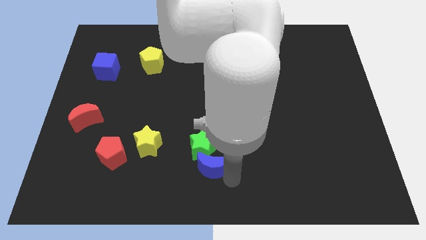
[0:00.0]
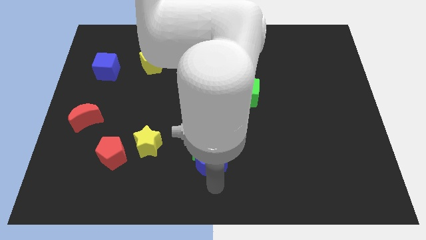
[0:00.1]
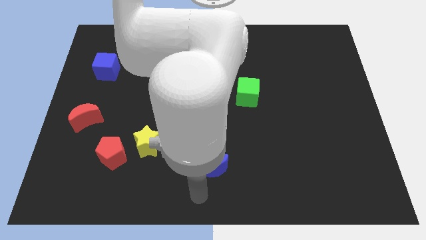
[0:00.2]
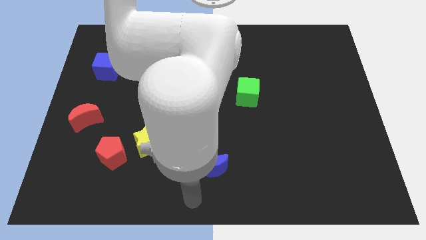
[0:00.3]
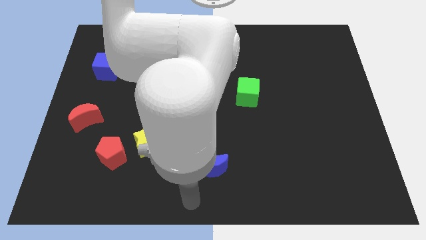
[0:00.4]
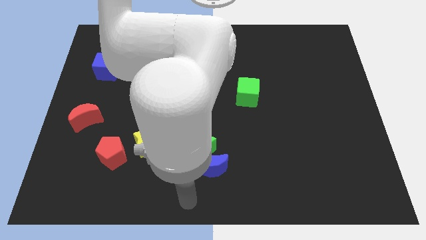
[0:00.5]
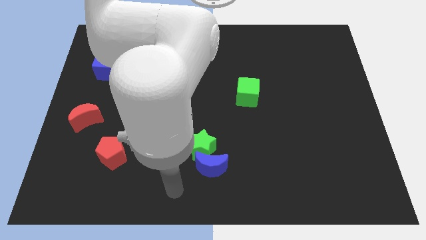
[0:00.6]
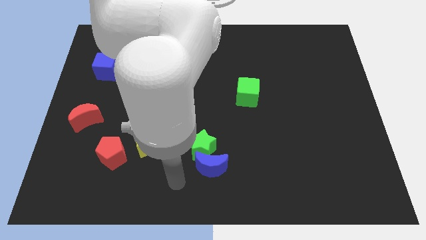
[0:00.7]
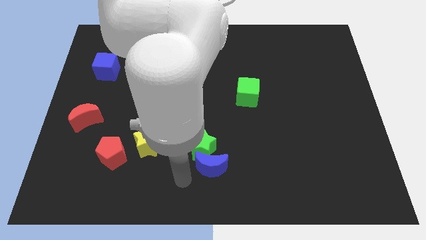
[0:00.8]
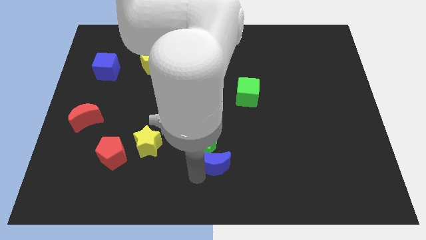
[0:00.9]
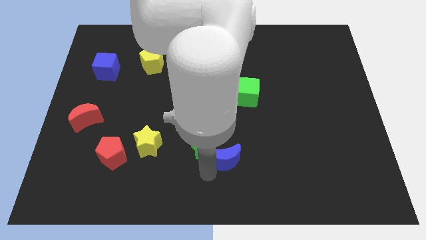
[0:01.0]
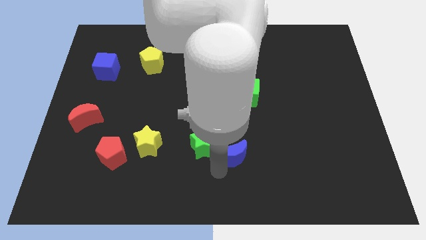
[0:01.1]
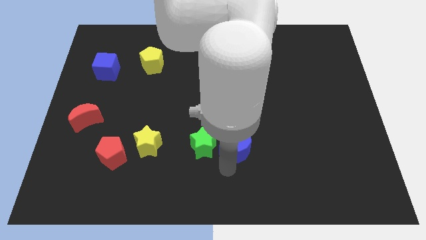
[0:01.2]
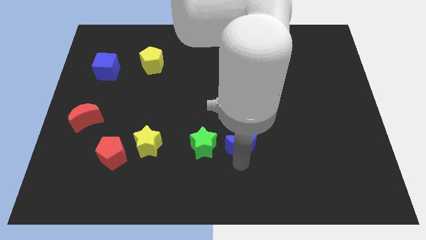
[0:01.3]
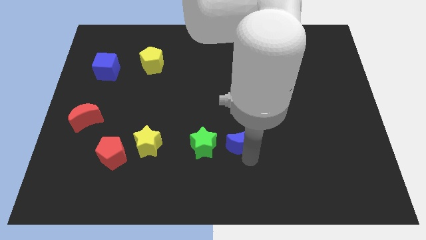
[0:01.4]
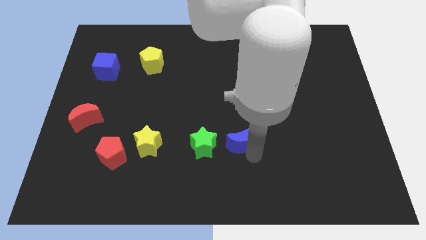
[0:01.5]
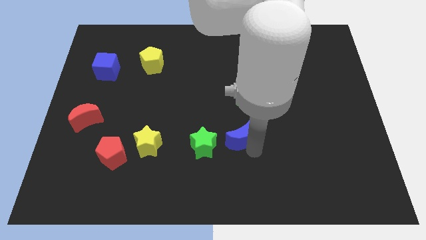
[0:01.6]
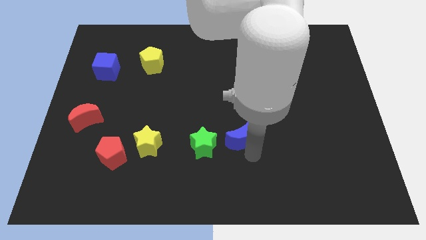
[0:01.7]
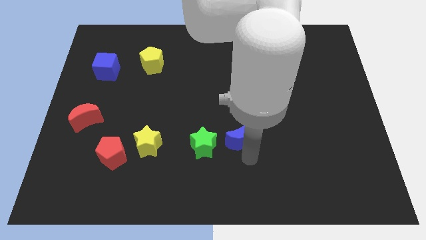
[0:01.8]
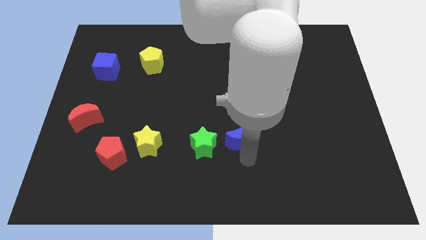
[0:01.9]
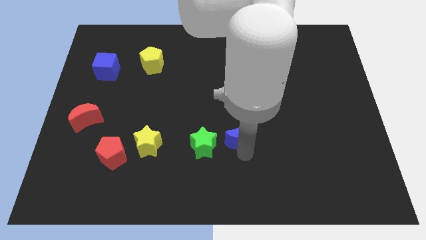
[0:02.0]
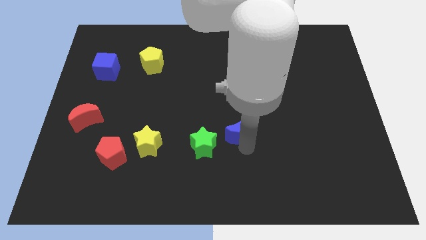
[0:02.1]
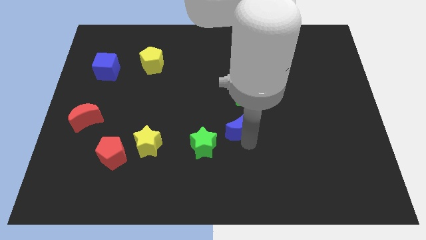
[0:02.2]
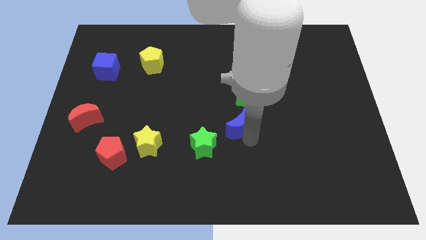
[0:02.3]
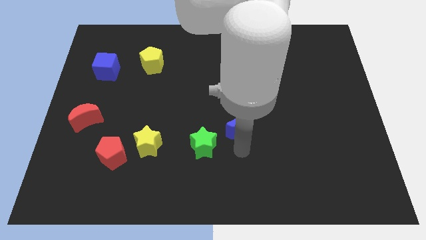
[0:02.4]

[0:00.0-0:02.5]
separate the green star and blue moon

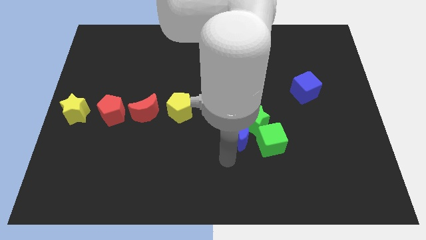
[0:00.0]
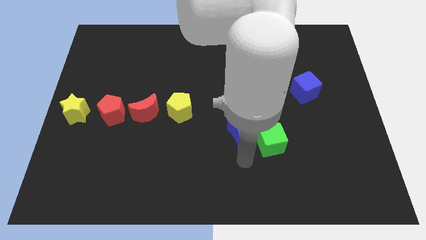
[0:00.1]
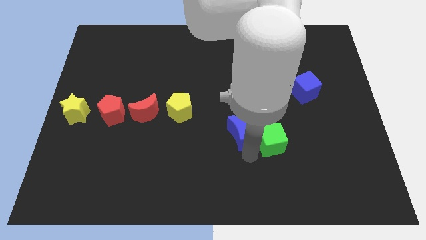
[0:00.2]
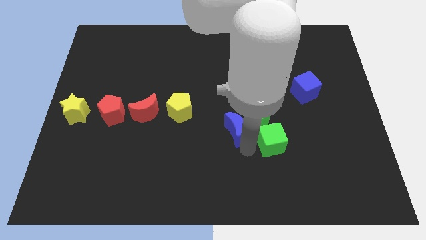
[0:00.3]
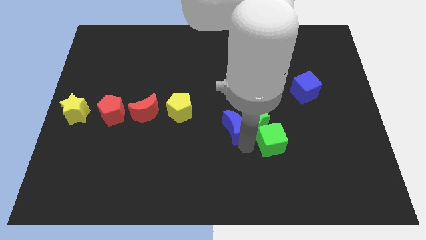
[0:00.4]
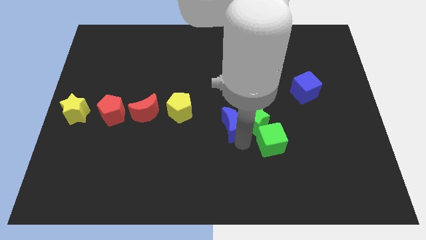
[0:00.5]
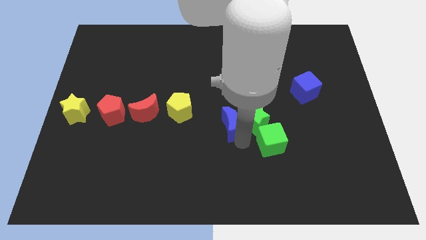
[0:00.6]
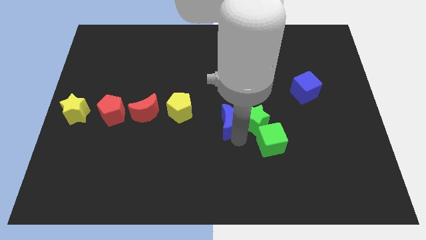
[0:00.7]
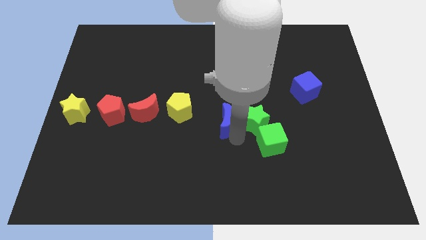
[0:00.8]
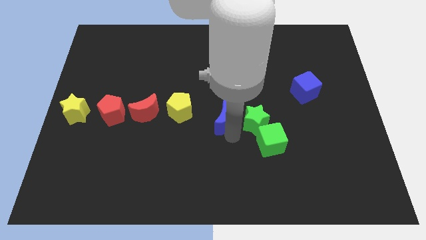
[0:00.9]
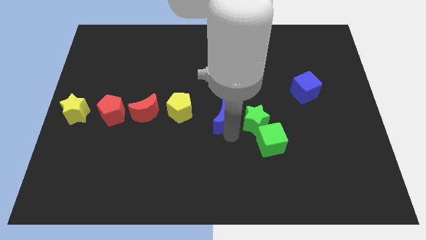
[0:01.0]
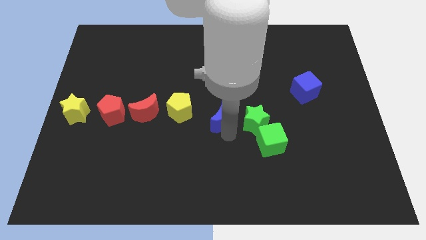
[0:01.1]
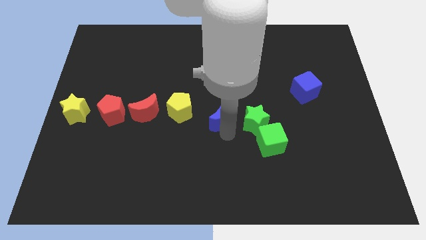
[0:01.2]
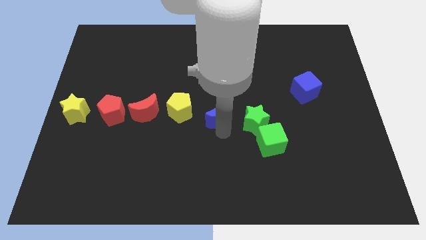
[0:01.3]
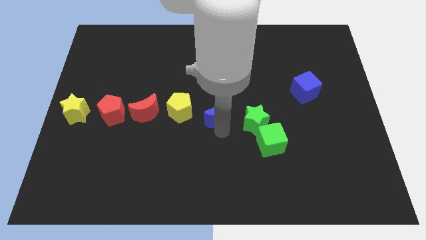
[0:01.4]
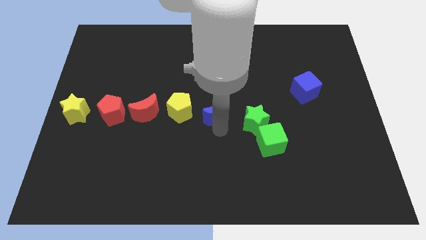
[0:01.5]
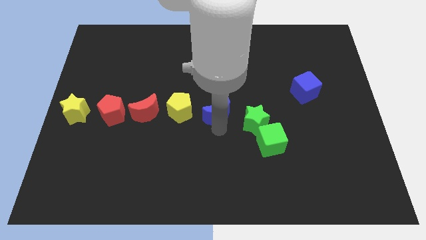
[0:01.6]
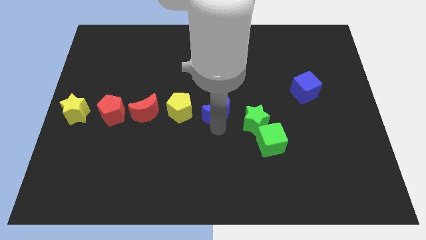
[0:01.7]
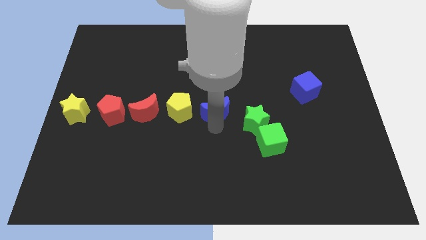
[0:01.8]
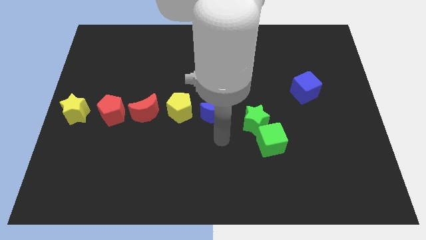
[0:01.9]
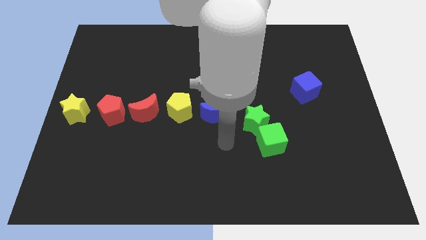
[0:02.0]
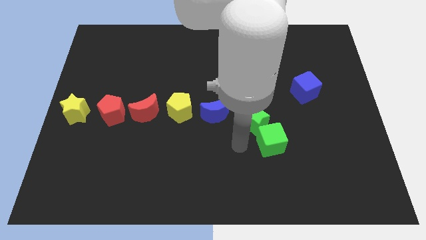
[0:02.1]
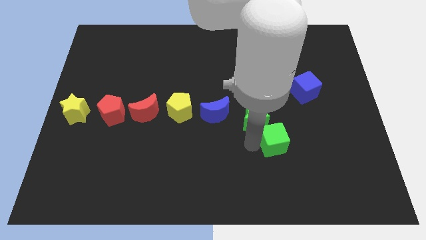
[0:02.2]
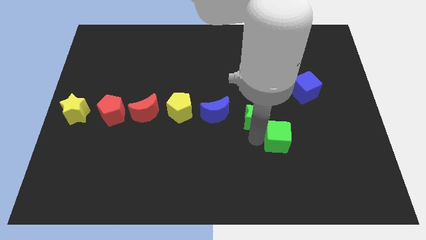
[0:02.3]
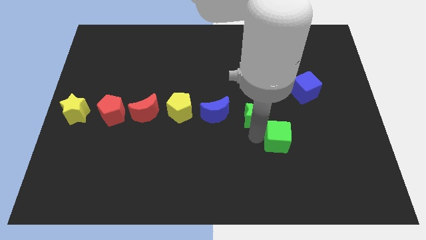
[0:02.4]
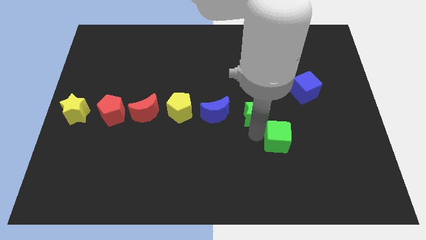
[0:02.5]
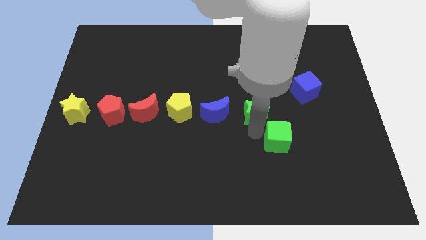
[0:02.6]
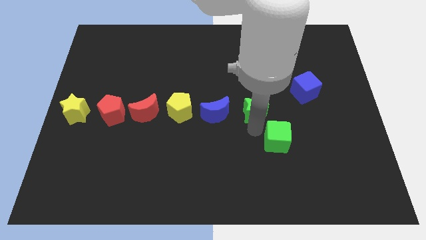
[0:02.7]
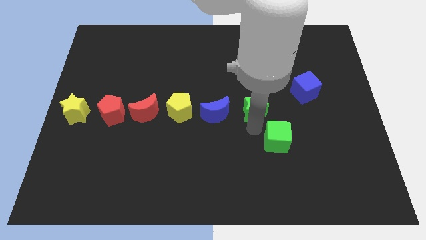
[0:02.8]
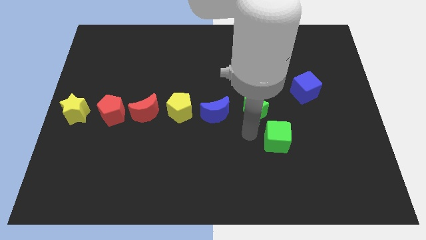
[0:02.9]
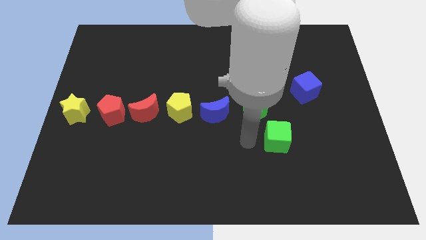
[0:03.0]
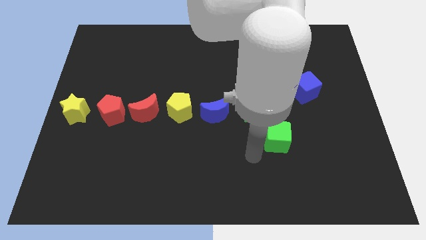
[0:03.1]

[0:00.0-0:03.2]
move the blue moon and green star to the right side of the horizontal line of blocks

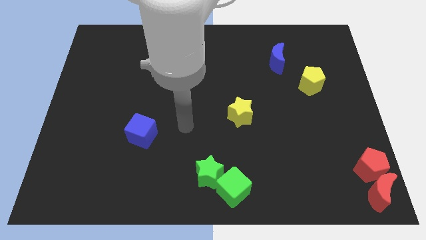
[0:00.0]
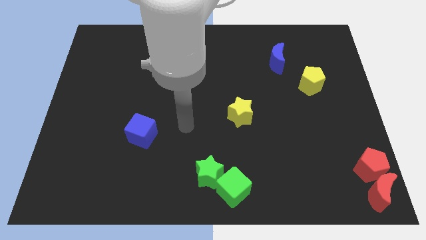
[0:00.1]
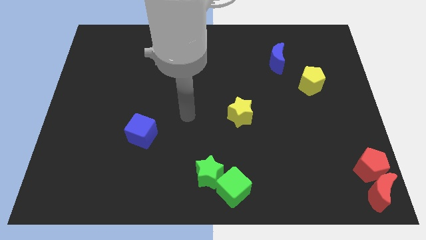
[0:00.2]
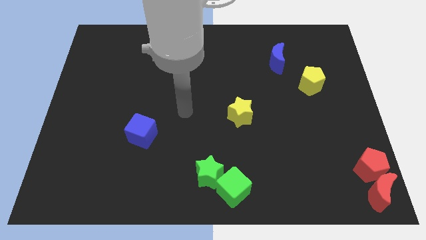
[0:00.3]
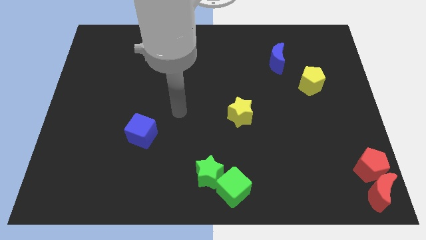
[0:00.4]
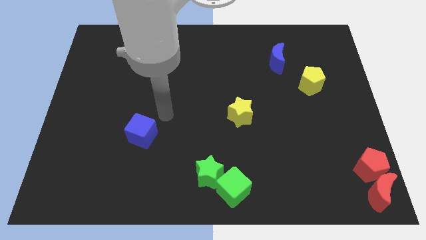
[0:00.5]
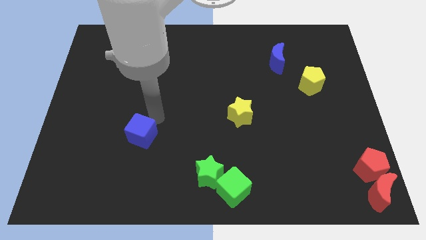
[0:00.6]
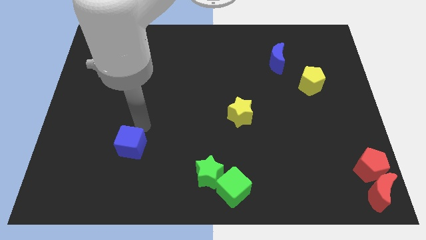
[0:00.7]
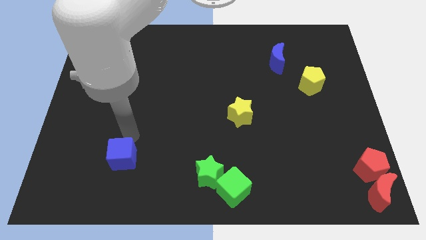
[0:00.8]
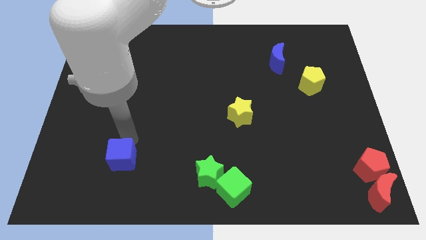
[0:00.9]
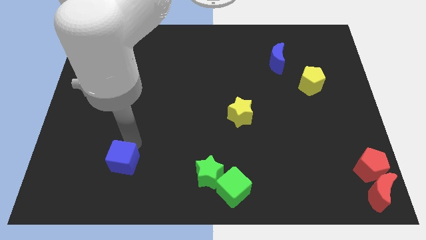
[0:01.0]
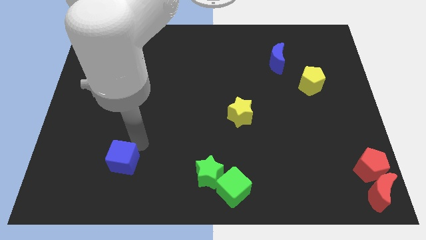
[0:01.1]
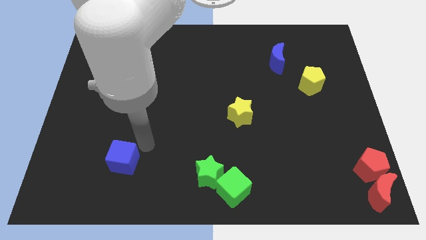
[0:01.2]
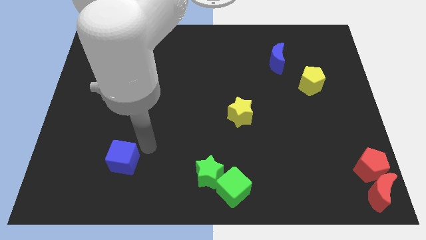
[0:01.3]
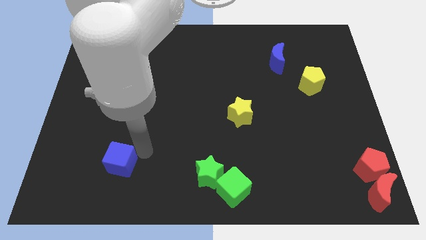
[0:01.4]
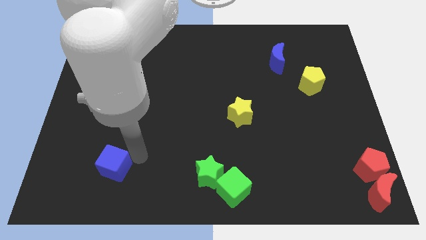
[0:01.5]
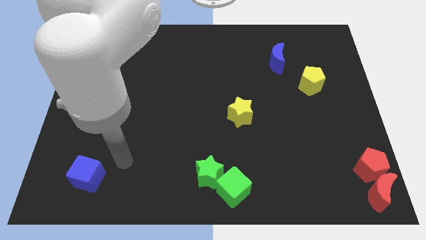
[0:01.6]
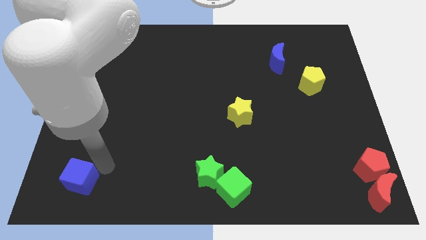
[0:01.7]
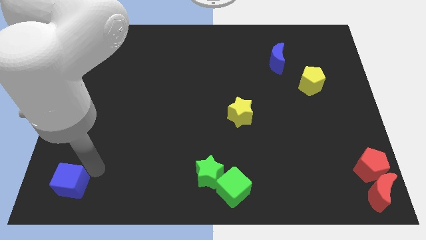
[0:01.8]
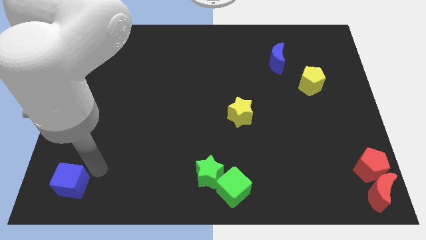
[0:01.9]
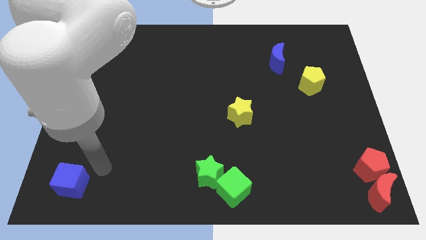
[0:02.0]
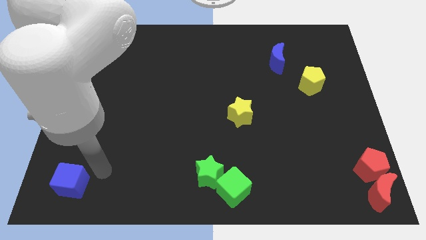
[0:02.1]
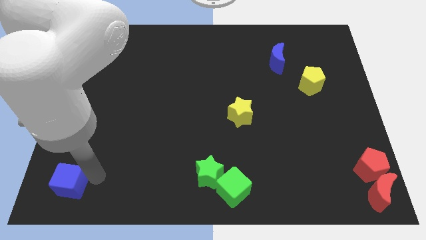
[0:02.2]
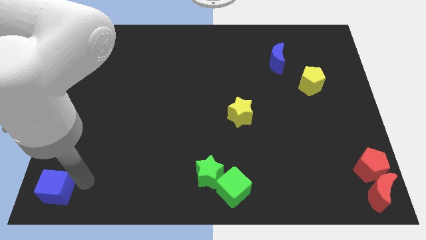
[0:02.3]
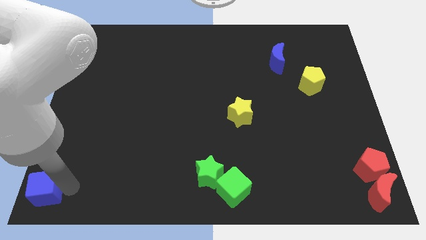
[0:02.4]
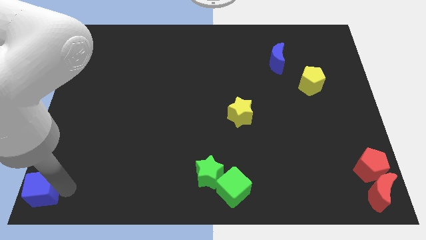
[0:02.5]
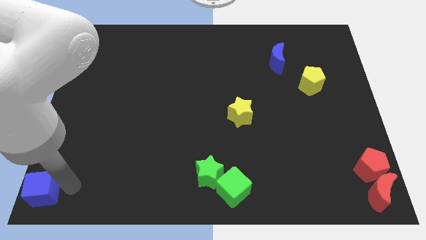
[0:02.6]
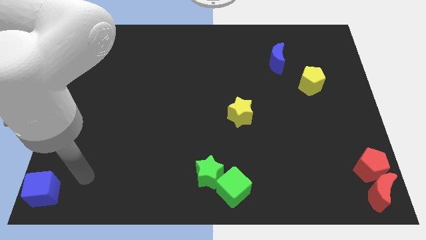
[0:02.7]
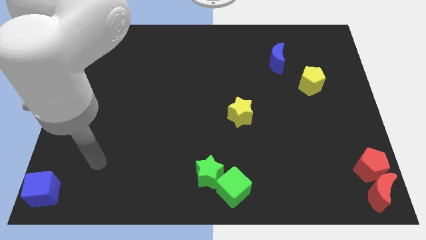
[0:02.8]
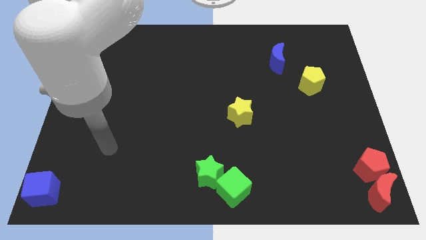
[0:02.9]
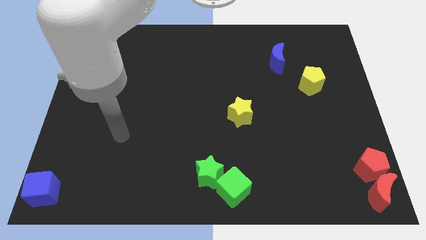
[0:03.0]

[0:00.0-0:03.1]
push blue cube towards bottom left corner
